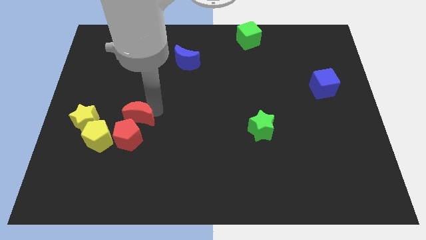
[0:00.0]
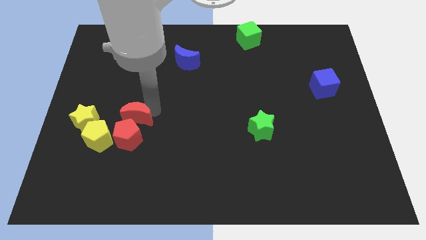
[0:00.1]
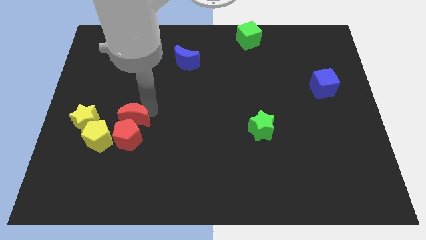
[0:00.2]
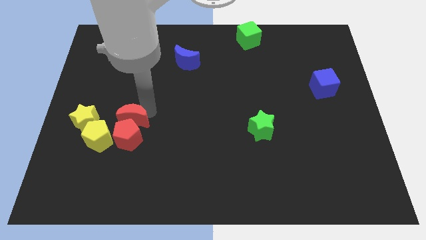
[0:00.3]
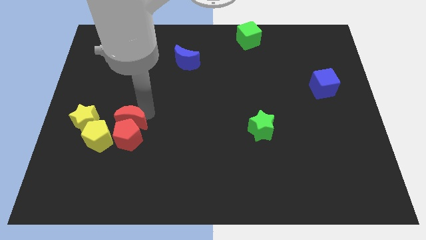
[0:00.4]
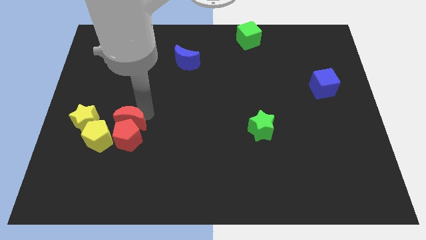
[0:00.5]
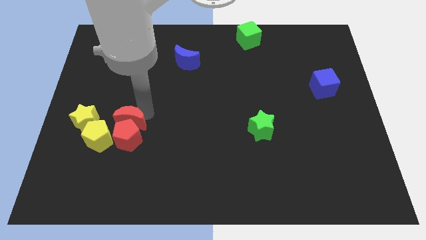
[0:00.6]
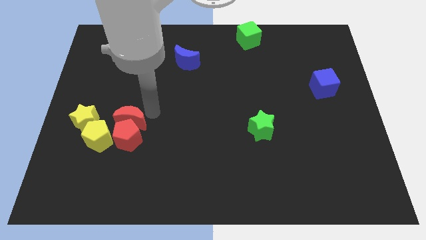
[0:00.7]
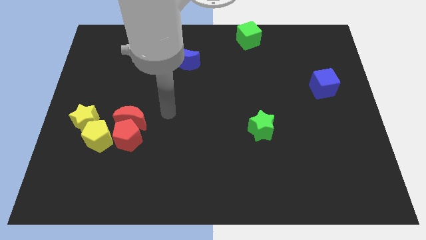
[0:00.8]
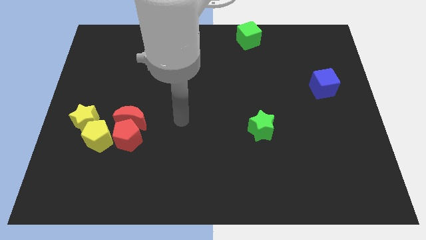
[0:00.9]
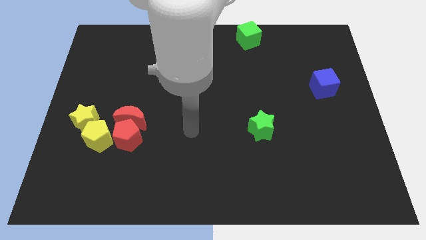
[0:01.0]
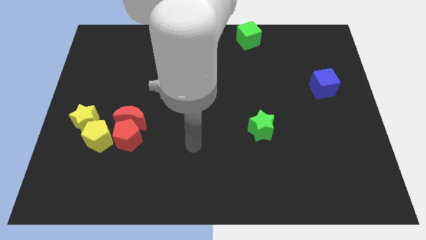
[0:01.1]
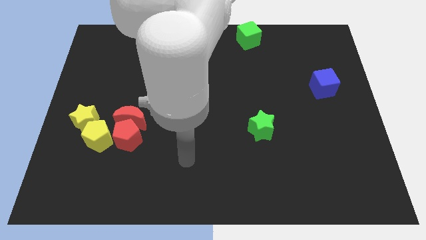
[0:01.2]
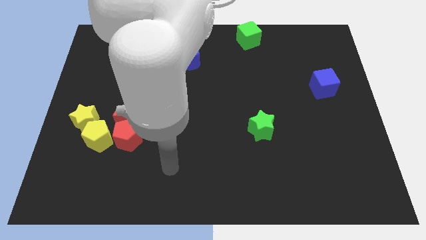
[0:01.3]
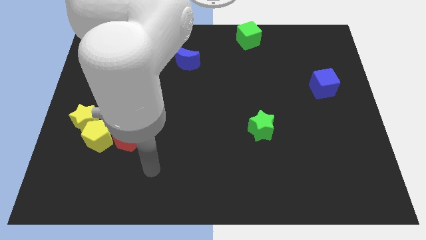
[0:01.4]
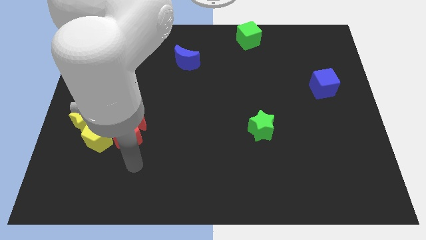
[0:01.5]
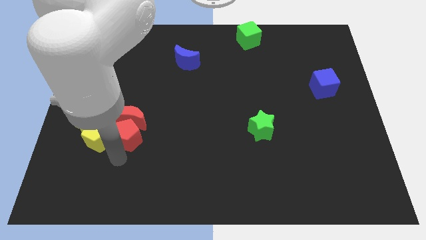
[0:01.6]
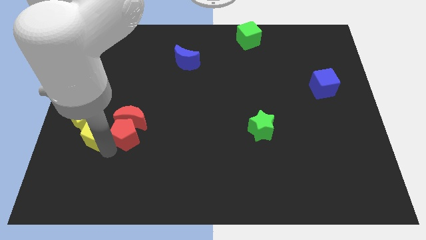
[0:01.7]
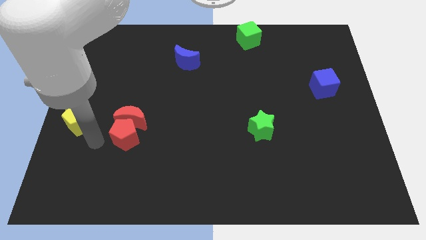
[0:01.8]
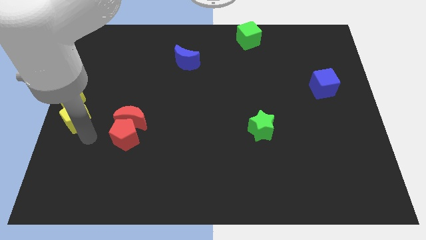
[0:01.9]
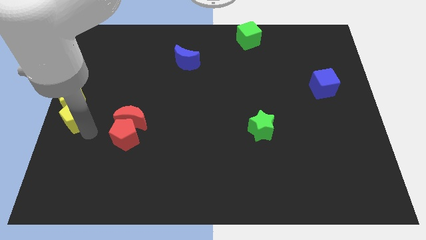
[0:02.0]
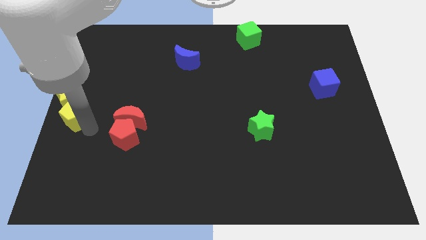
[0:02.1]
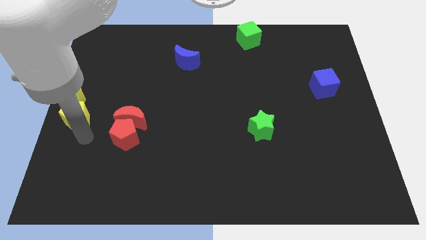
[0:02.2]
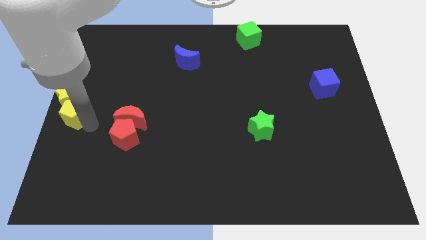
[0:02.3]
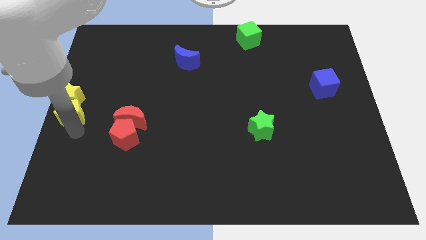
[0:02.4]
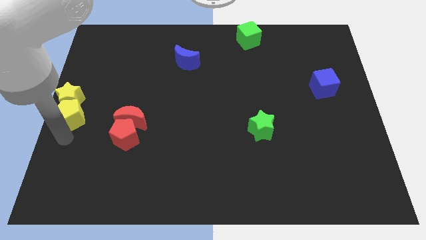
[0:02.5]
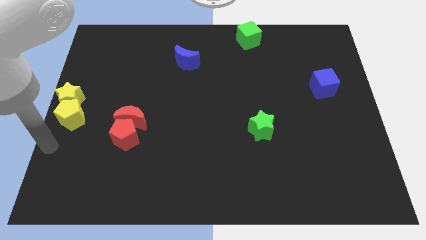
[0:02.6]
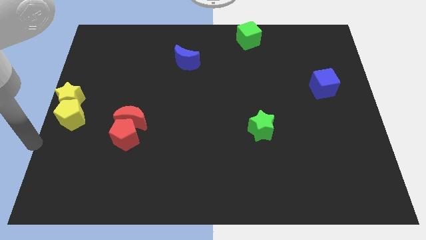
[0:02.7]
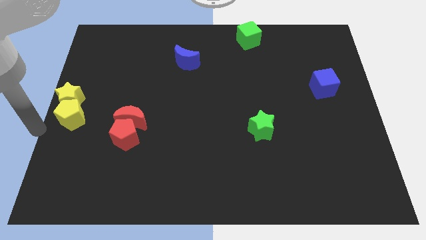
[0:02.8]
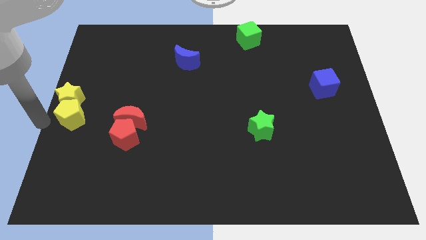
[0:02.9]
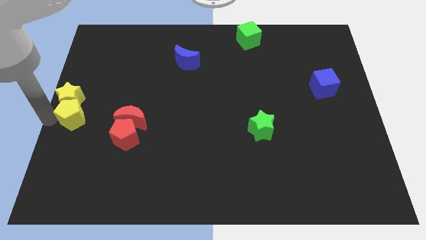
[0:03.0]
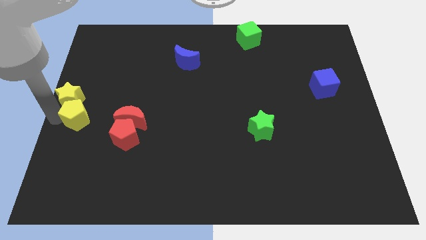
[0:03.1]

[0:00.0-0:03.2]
place the yellow blocks at the left center of the board

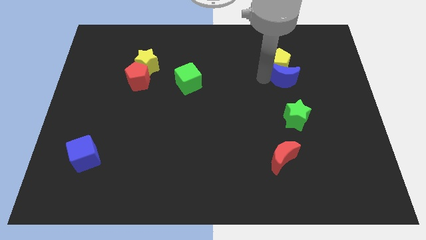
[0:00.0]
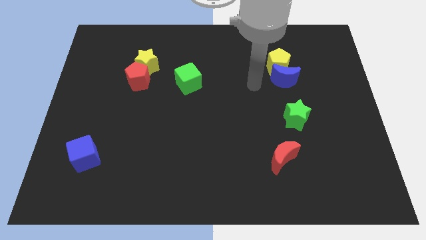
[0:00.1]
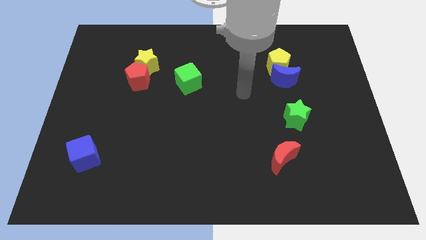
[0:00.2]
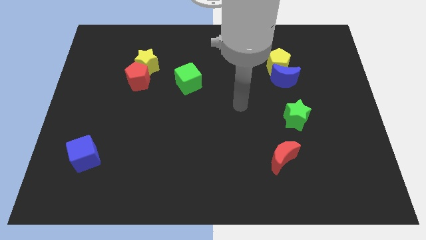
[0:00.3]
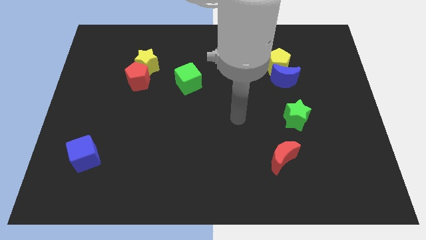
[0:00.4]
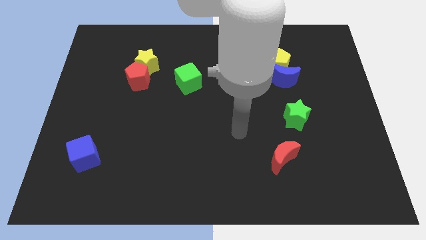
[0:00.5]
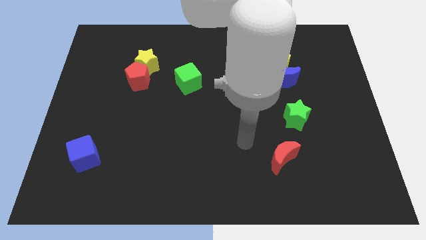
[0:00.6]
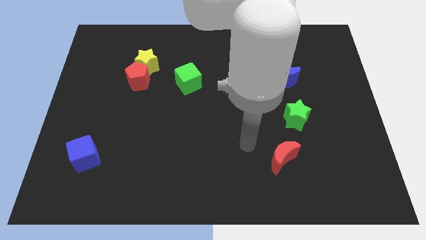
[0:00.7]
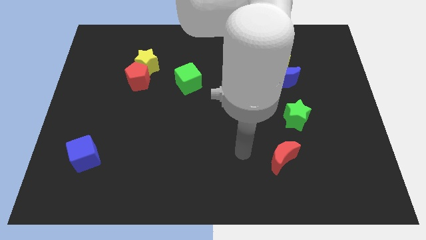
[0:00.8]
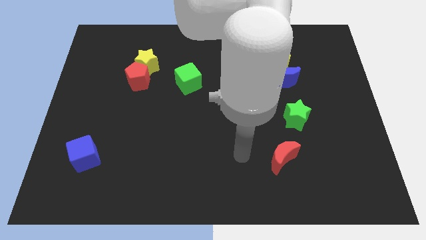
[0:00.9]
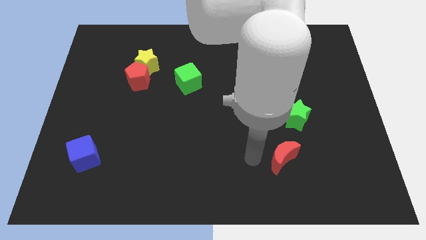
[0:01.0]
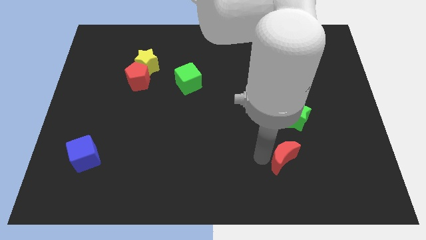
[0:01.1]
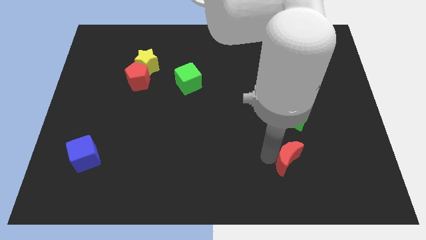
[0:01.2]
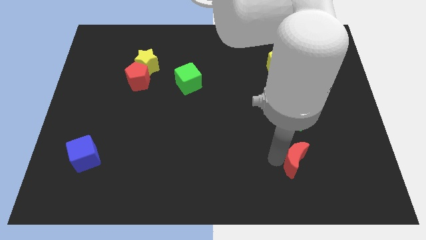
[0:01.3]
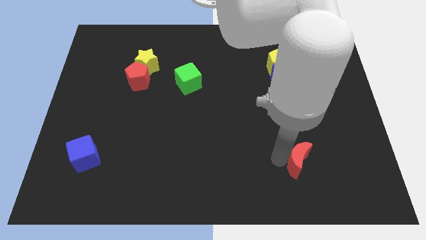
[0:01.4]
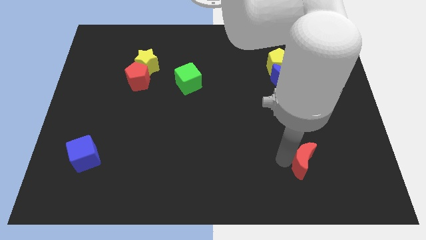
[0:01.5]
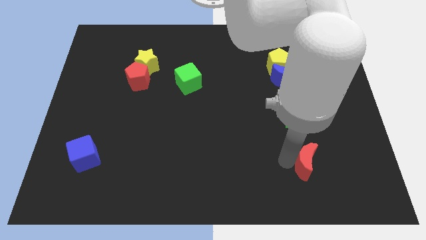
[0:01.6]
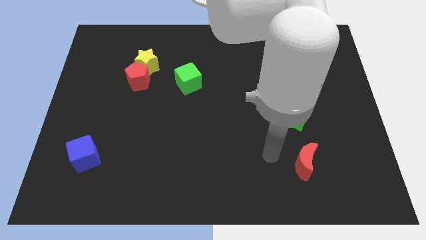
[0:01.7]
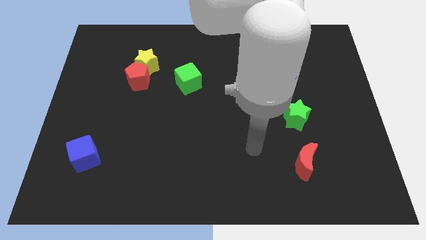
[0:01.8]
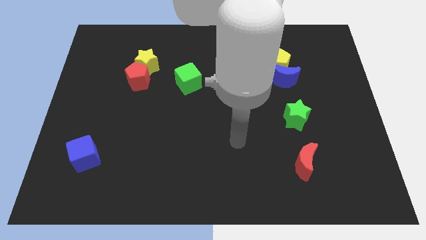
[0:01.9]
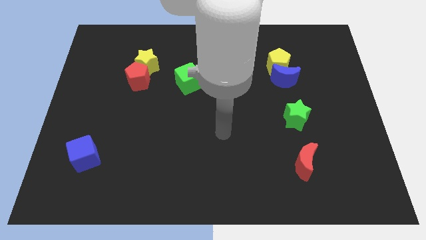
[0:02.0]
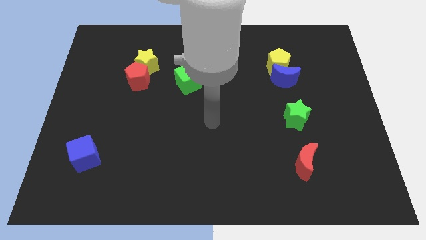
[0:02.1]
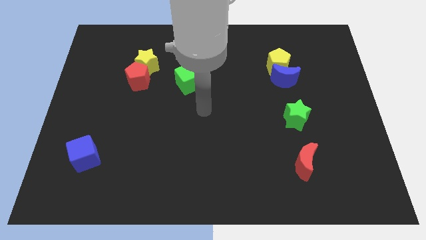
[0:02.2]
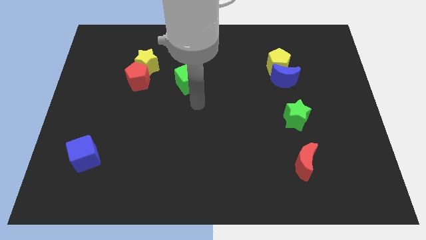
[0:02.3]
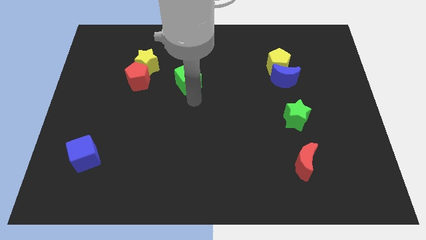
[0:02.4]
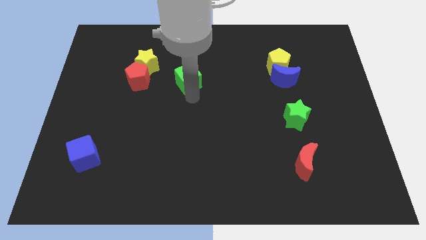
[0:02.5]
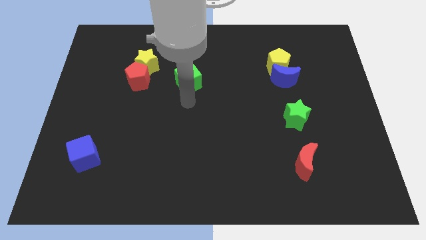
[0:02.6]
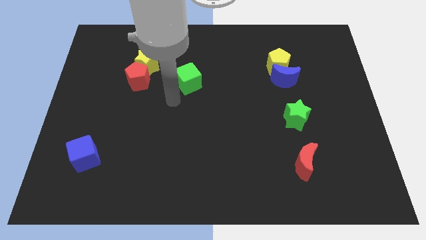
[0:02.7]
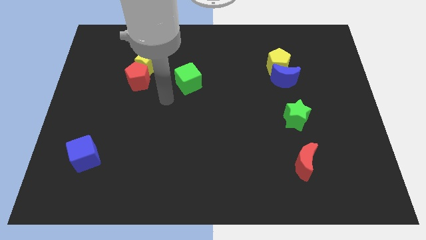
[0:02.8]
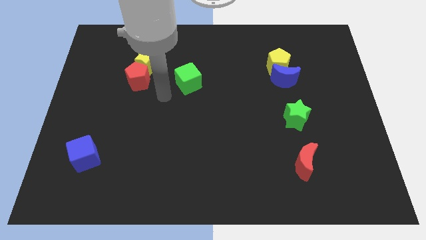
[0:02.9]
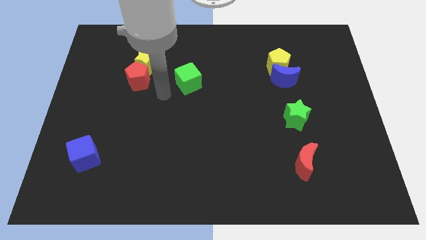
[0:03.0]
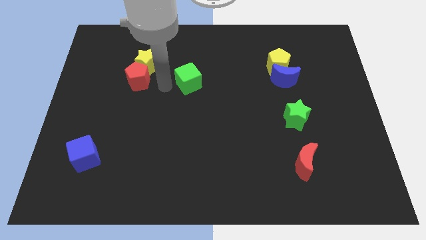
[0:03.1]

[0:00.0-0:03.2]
push the red moon slightly towards the right side of the board

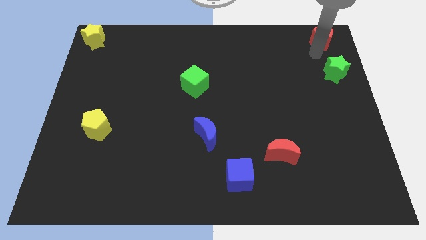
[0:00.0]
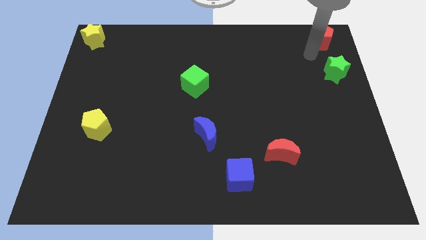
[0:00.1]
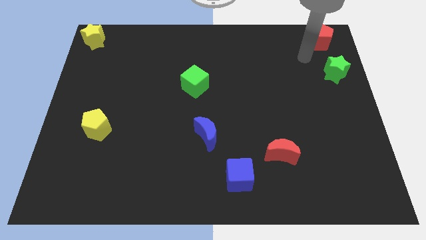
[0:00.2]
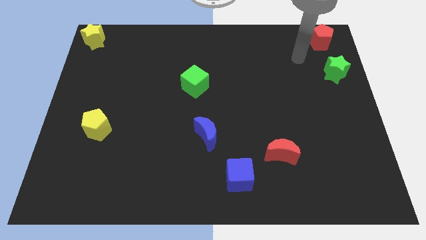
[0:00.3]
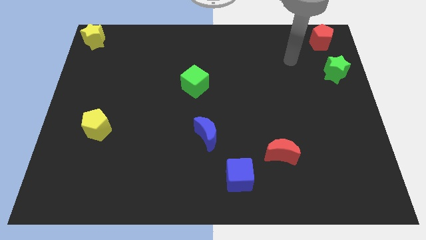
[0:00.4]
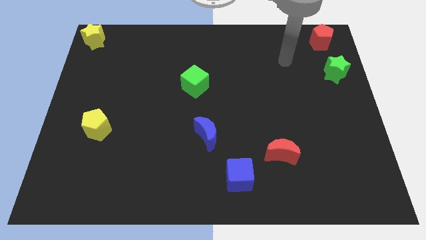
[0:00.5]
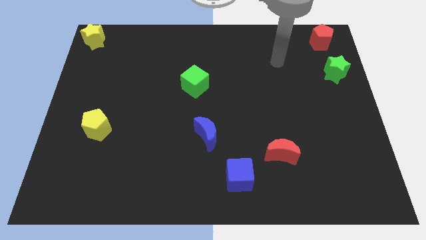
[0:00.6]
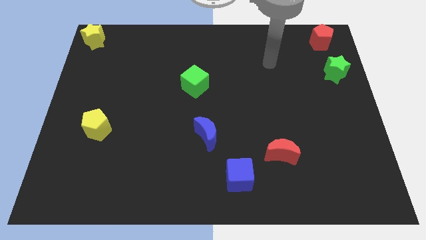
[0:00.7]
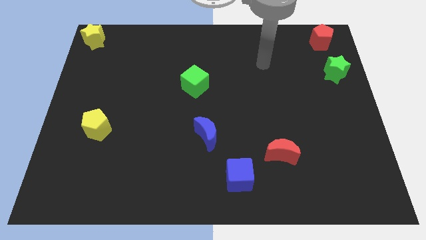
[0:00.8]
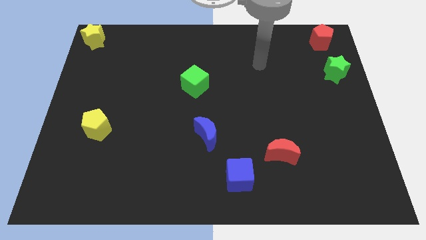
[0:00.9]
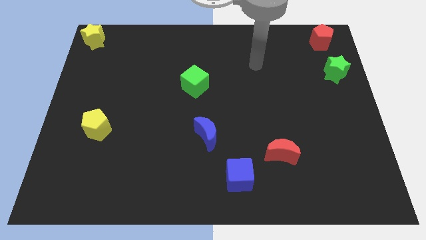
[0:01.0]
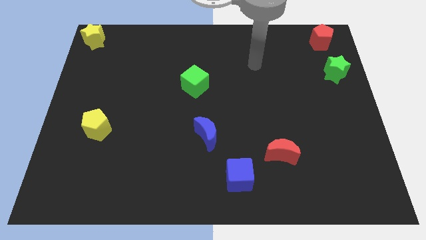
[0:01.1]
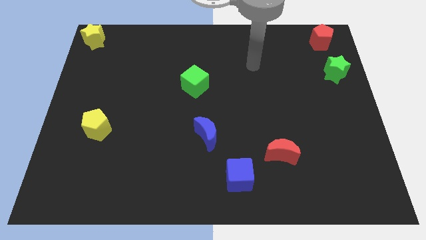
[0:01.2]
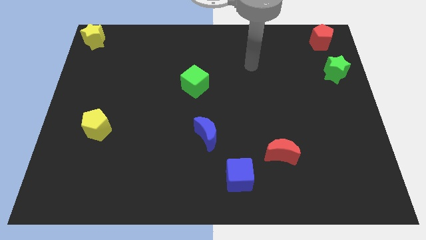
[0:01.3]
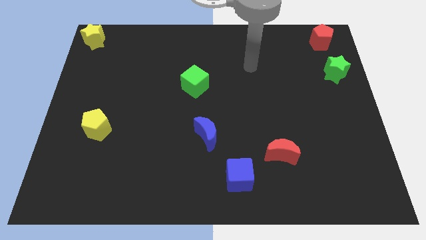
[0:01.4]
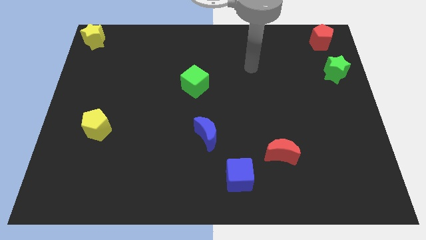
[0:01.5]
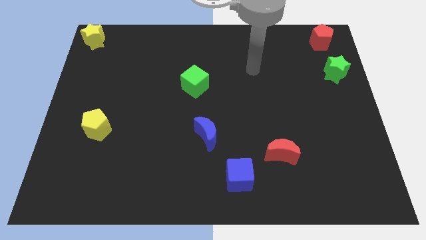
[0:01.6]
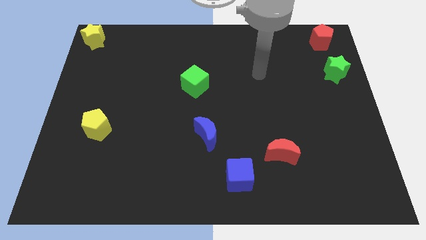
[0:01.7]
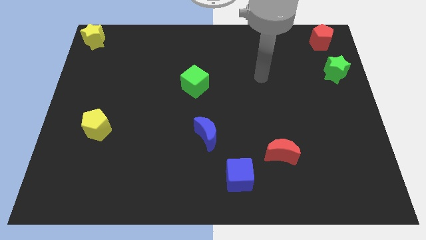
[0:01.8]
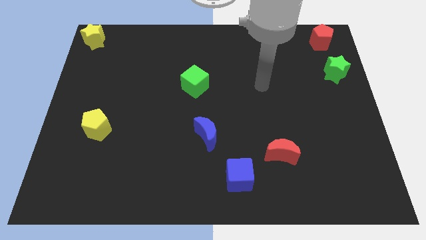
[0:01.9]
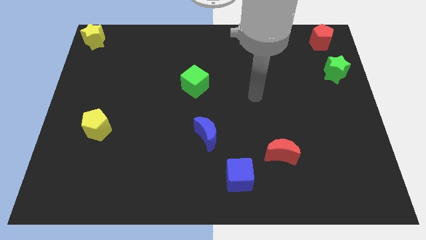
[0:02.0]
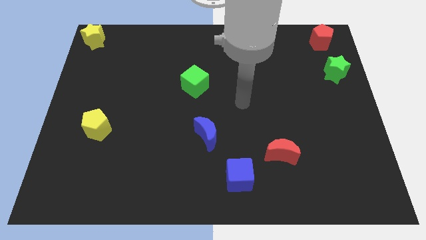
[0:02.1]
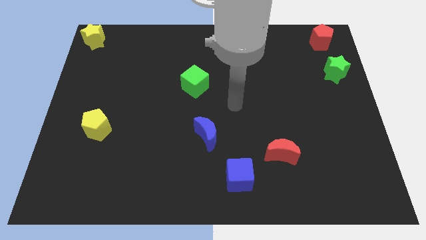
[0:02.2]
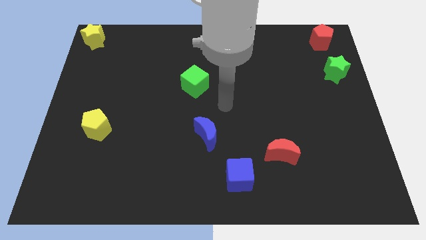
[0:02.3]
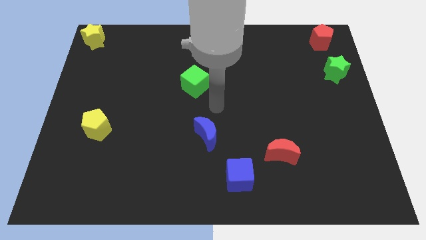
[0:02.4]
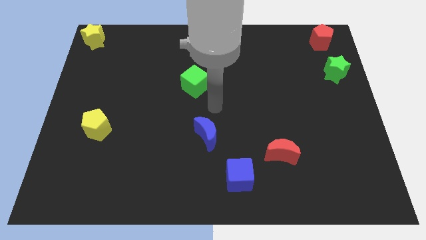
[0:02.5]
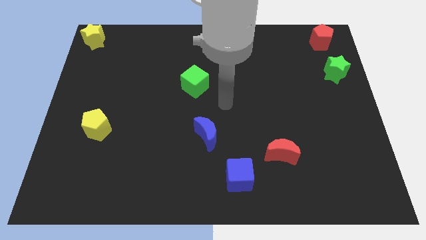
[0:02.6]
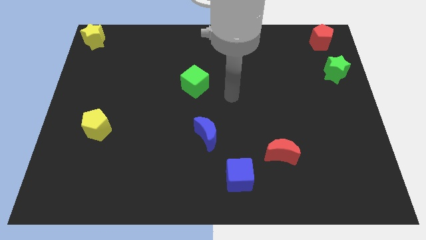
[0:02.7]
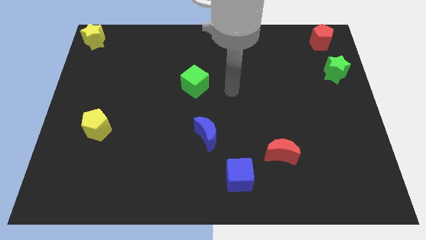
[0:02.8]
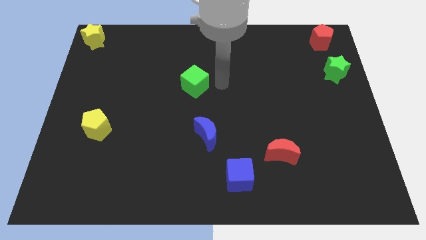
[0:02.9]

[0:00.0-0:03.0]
point your arm at the right of the green cube
